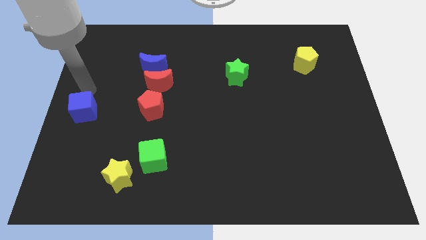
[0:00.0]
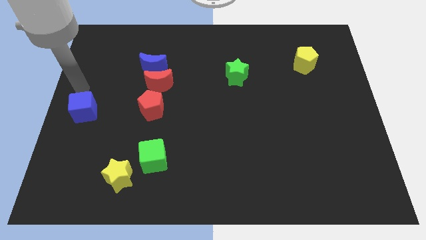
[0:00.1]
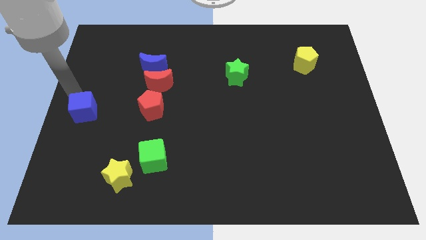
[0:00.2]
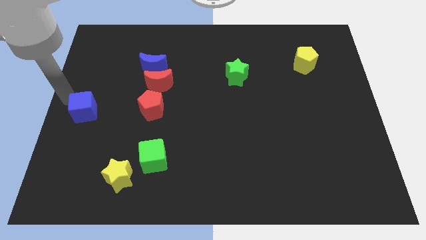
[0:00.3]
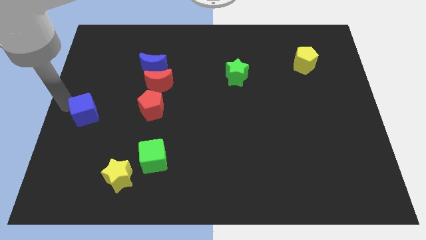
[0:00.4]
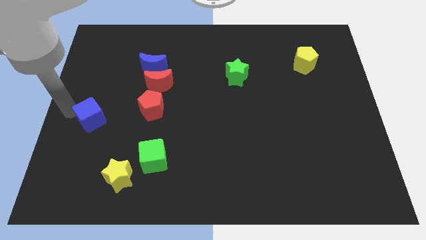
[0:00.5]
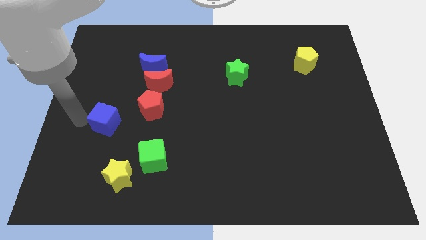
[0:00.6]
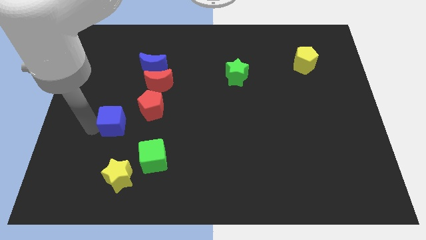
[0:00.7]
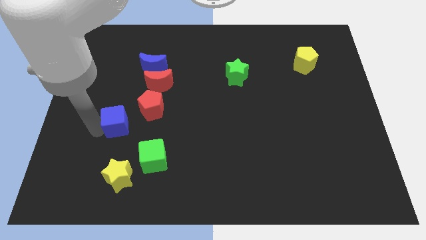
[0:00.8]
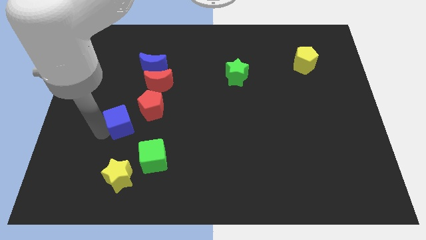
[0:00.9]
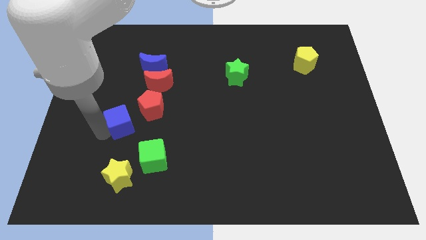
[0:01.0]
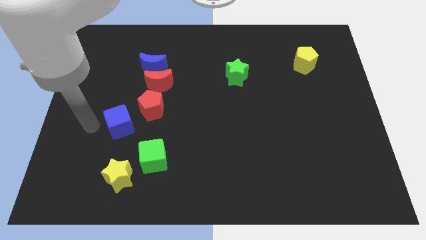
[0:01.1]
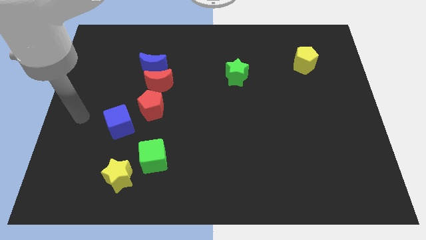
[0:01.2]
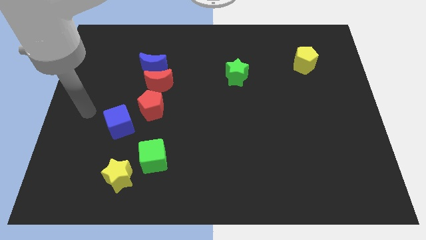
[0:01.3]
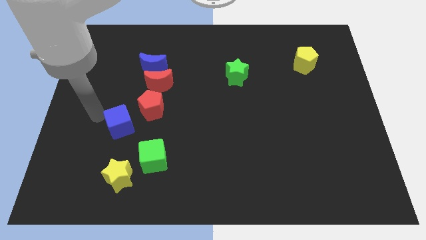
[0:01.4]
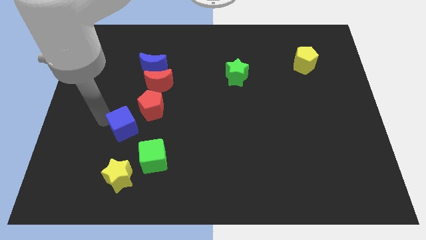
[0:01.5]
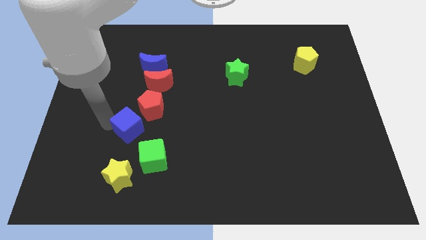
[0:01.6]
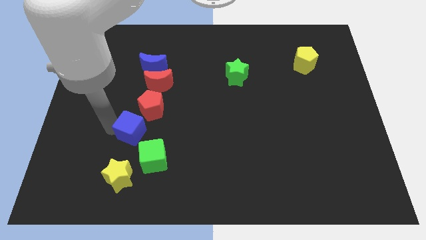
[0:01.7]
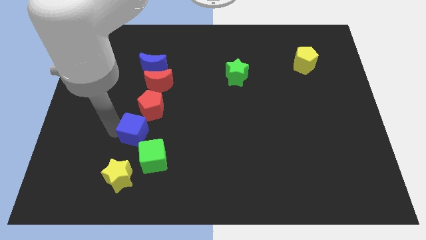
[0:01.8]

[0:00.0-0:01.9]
push the blue cube to the bottom left of the red pentagon

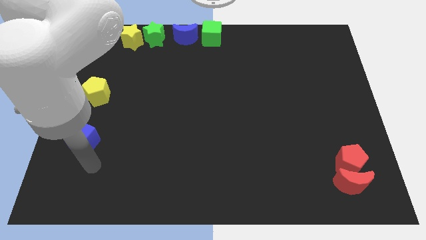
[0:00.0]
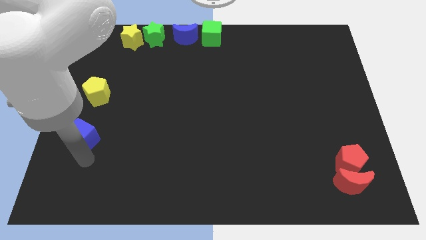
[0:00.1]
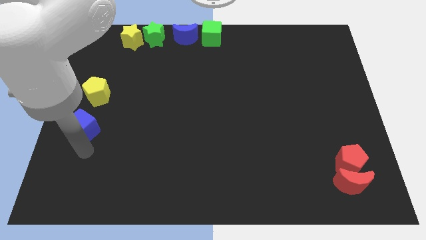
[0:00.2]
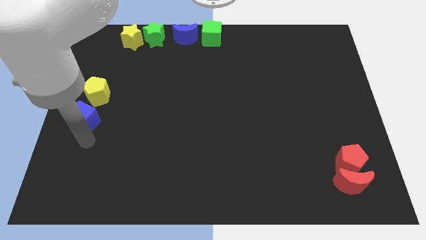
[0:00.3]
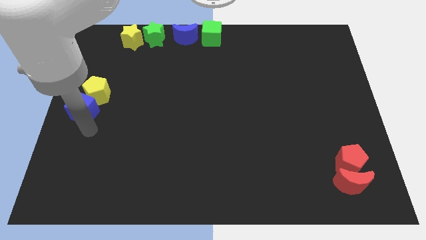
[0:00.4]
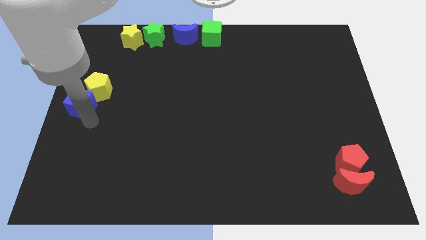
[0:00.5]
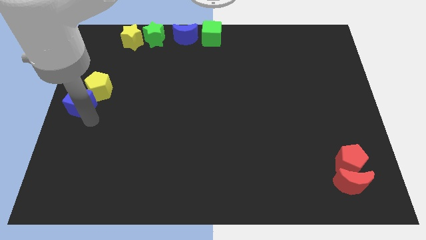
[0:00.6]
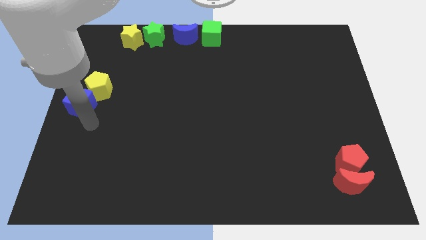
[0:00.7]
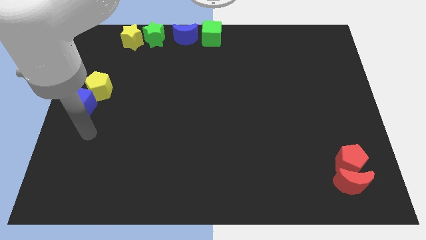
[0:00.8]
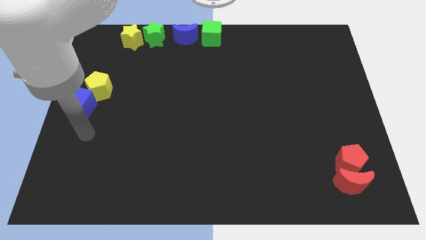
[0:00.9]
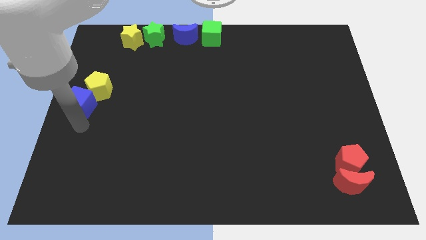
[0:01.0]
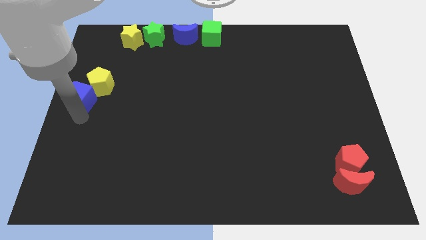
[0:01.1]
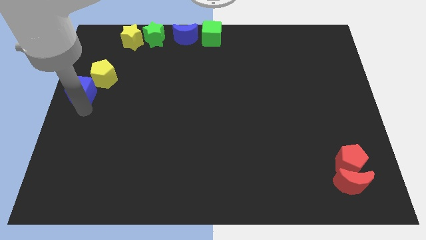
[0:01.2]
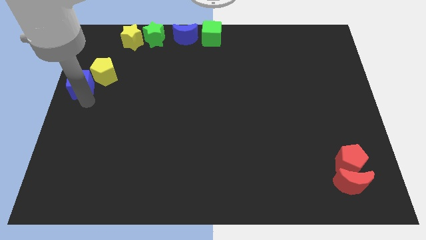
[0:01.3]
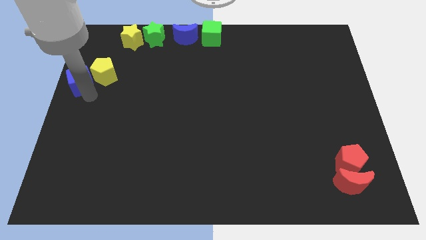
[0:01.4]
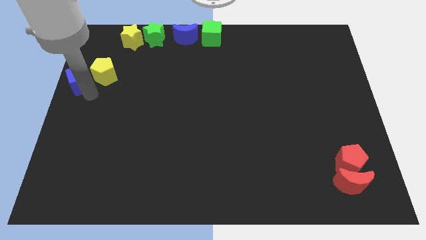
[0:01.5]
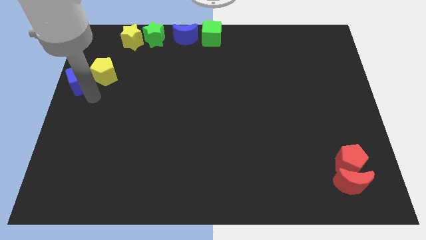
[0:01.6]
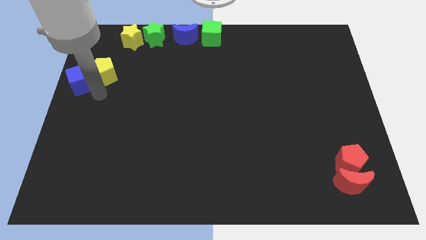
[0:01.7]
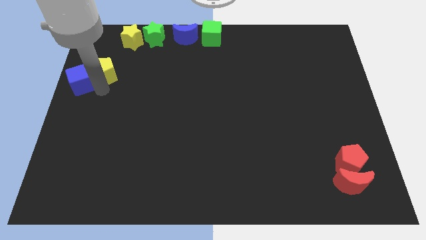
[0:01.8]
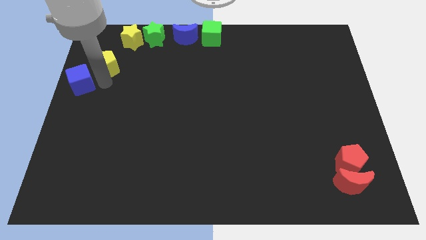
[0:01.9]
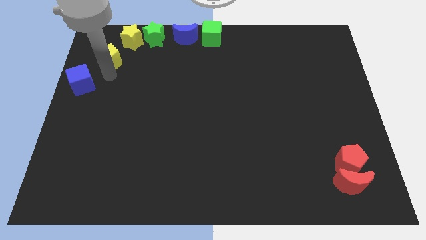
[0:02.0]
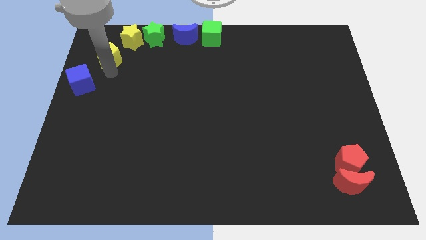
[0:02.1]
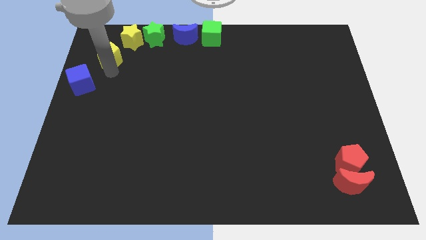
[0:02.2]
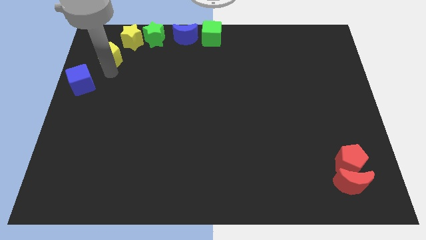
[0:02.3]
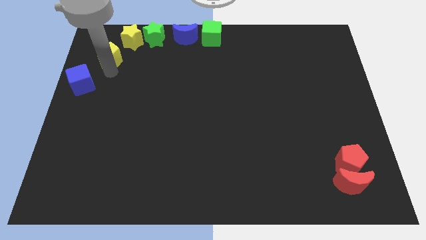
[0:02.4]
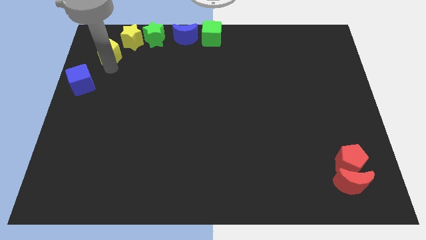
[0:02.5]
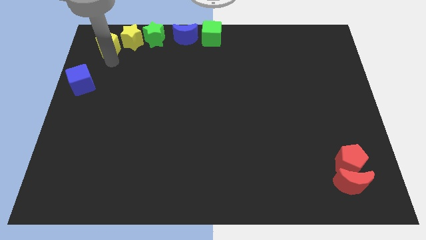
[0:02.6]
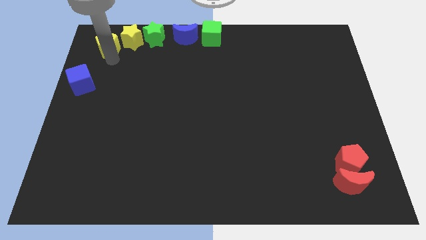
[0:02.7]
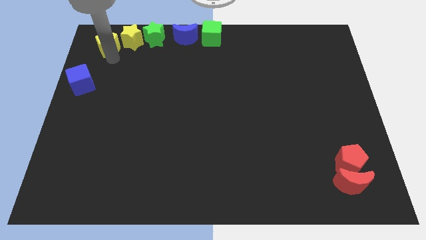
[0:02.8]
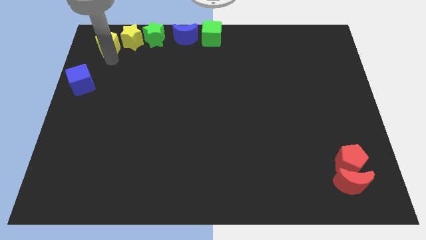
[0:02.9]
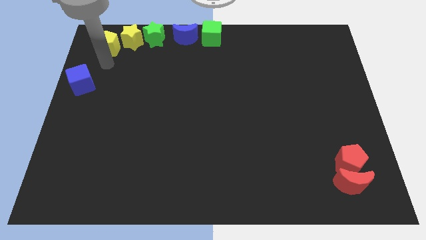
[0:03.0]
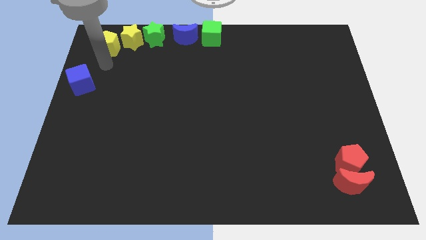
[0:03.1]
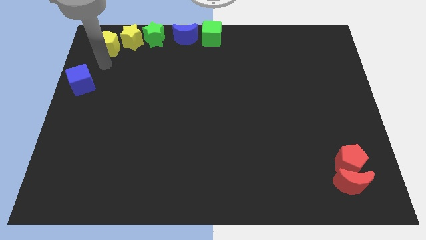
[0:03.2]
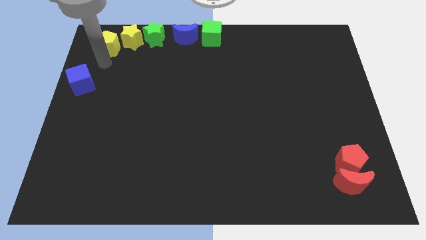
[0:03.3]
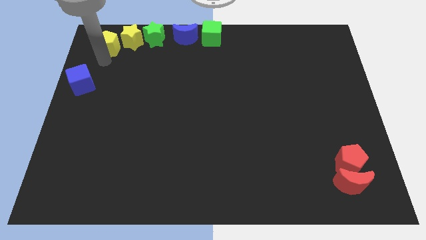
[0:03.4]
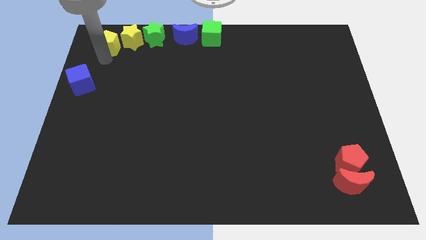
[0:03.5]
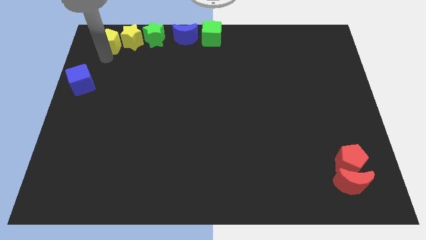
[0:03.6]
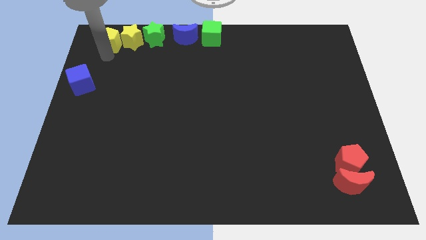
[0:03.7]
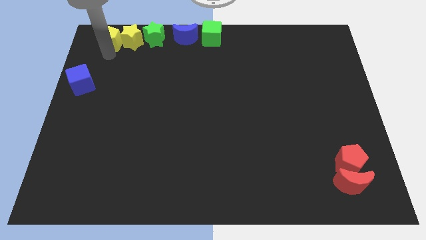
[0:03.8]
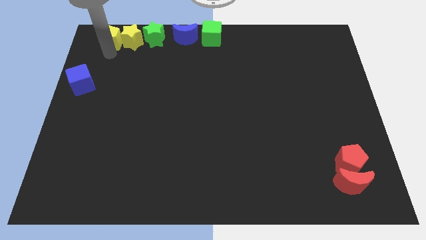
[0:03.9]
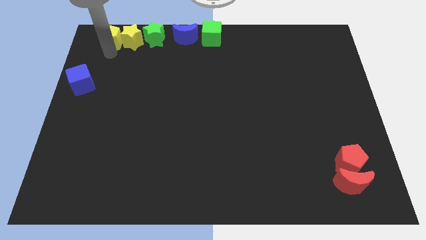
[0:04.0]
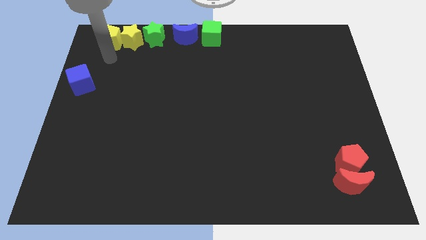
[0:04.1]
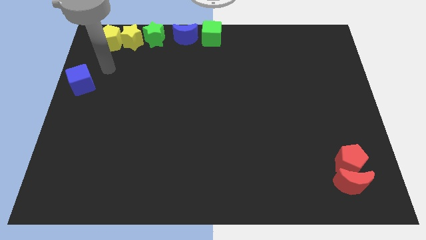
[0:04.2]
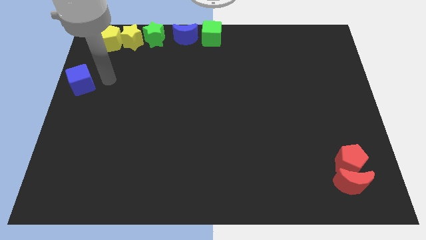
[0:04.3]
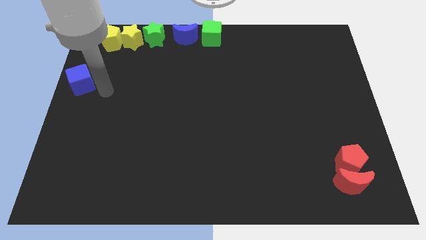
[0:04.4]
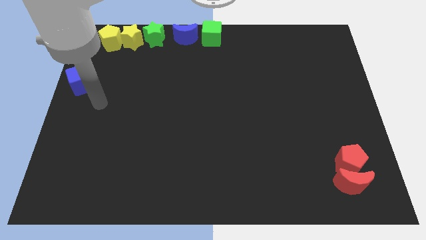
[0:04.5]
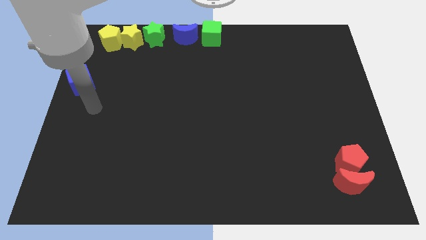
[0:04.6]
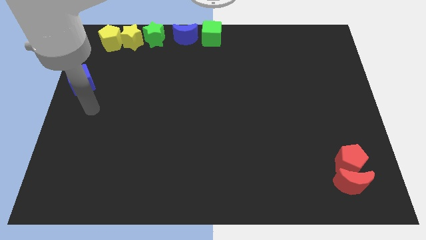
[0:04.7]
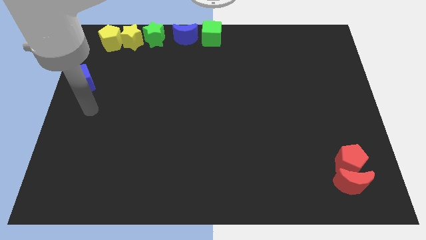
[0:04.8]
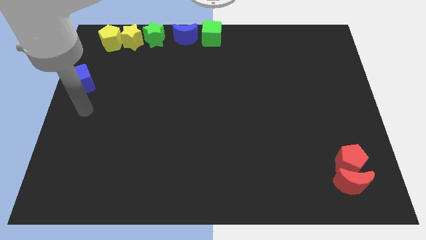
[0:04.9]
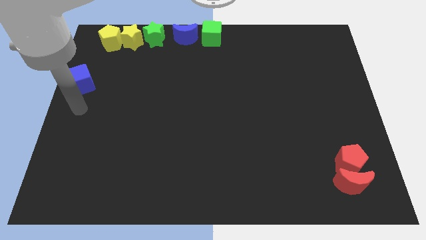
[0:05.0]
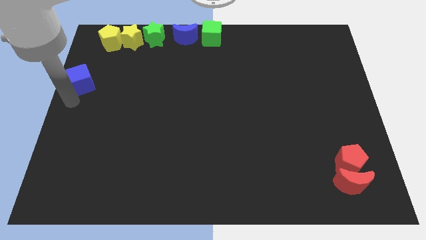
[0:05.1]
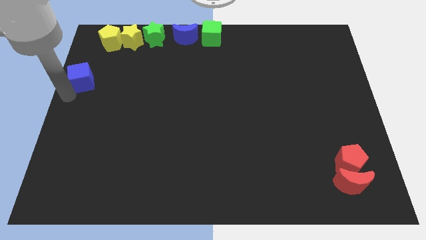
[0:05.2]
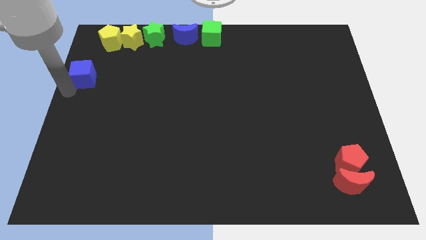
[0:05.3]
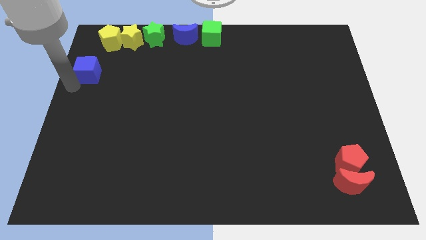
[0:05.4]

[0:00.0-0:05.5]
place the yellow pentagon to the left of the yellow star

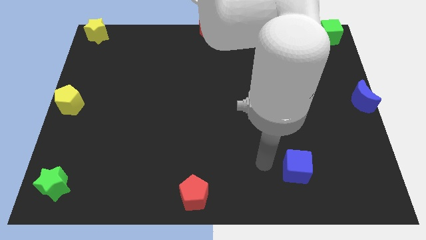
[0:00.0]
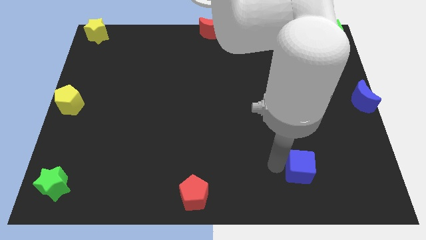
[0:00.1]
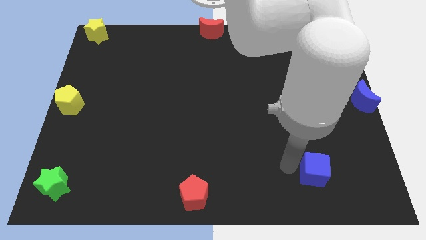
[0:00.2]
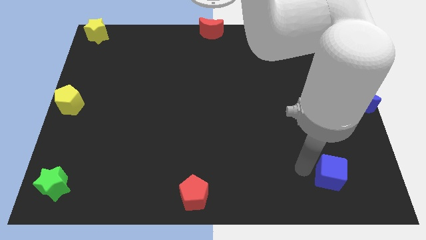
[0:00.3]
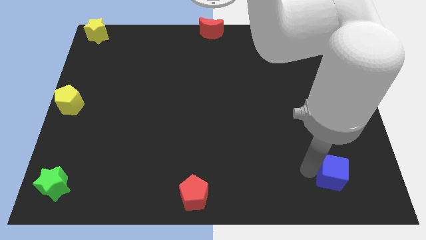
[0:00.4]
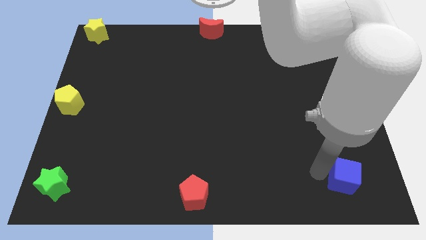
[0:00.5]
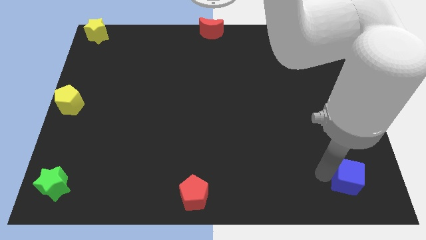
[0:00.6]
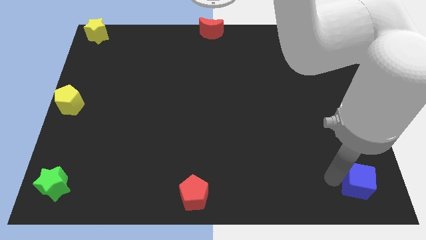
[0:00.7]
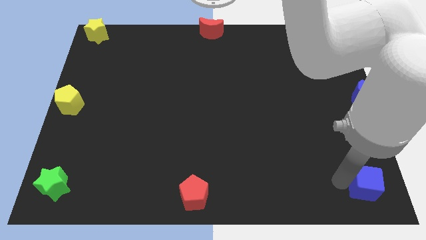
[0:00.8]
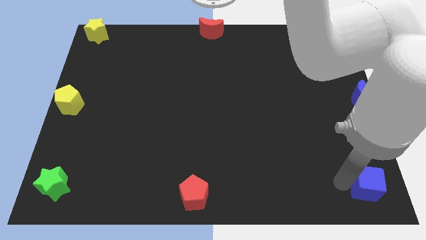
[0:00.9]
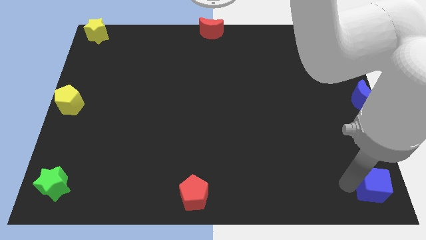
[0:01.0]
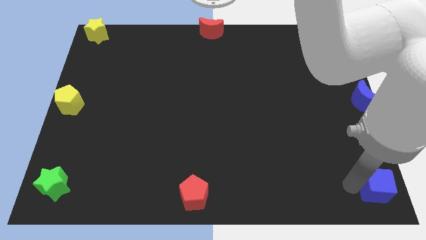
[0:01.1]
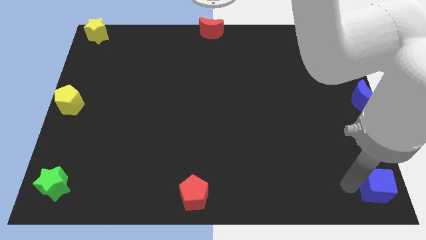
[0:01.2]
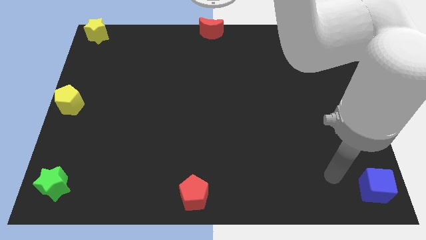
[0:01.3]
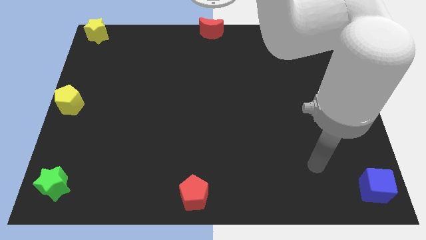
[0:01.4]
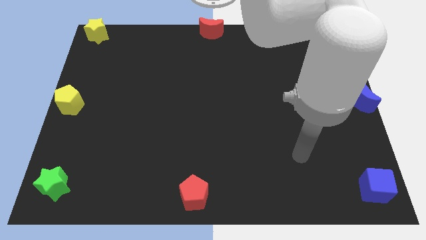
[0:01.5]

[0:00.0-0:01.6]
move the blue cube towards the bottom right side of the board
